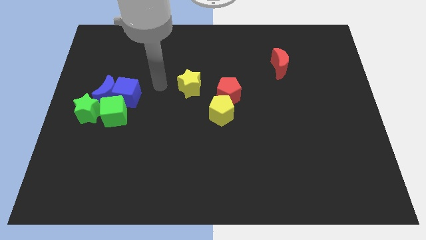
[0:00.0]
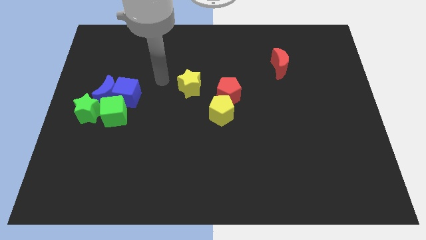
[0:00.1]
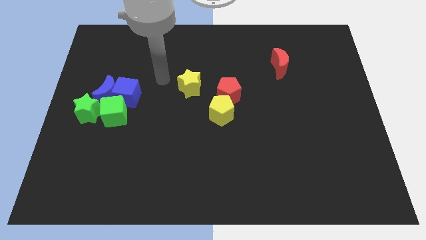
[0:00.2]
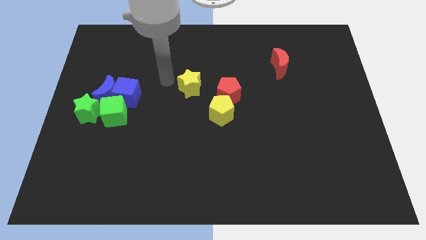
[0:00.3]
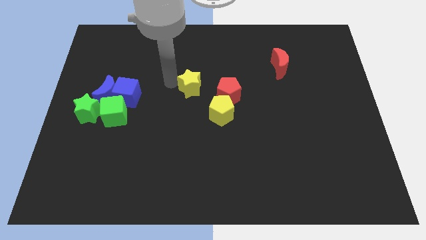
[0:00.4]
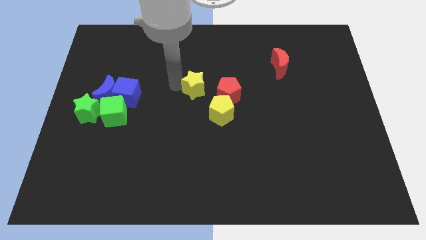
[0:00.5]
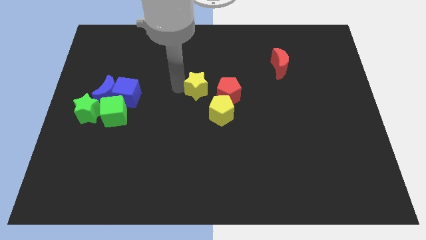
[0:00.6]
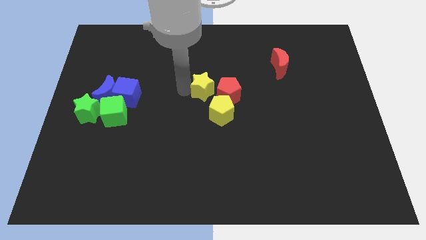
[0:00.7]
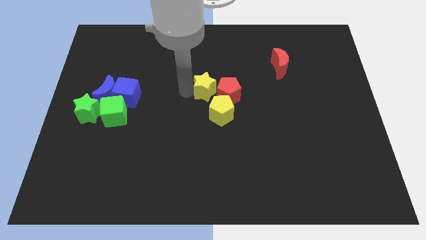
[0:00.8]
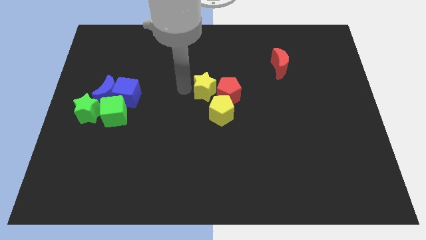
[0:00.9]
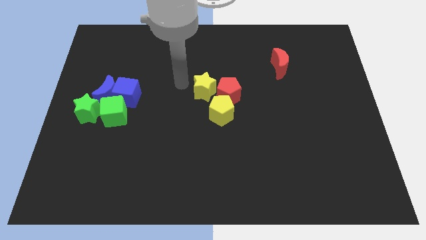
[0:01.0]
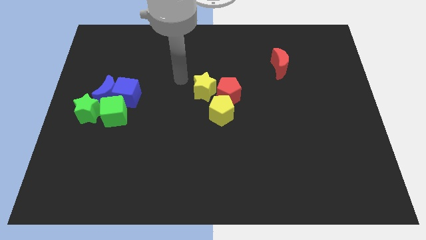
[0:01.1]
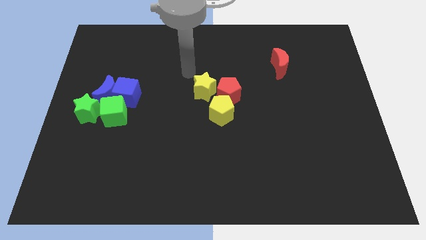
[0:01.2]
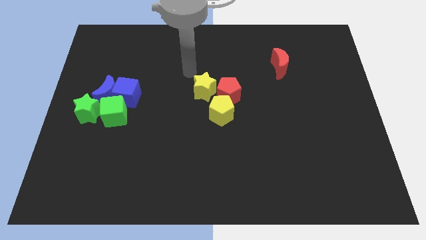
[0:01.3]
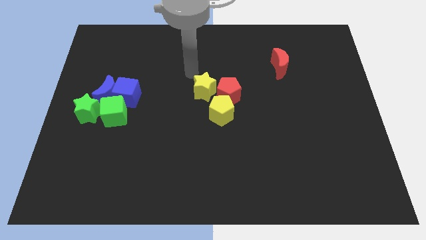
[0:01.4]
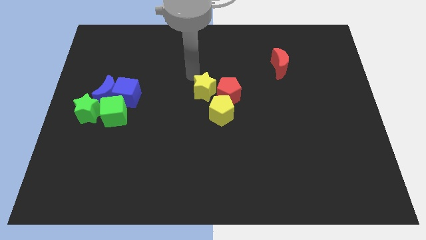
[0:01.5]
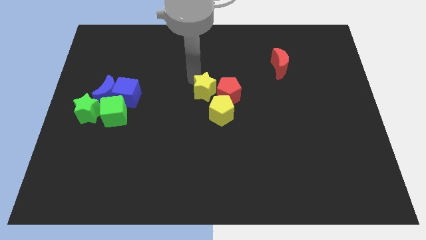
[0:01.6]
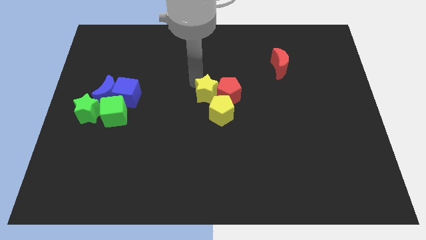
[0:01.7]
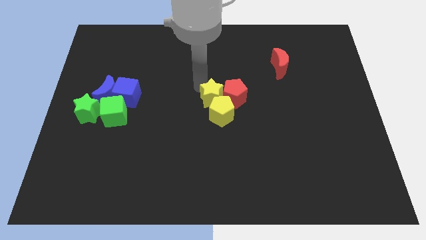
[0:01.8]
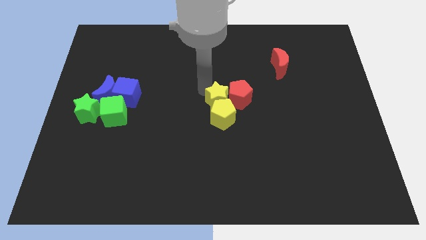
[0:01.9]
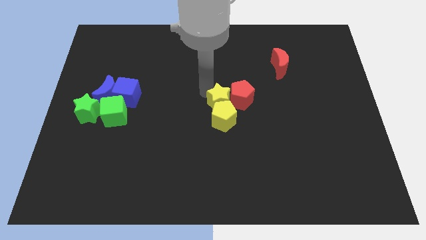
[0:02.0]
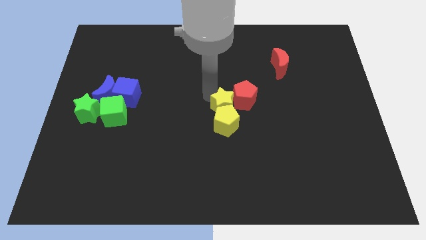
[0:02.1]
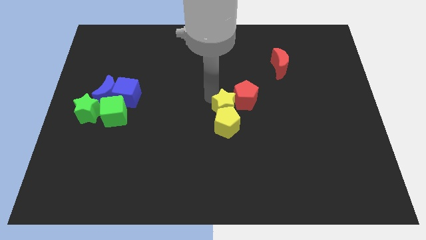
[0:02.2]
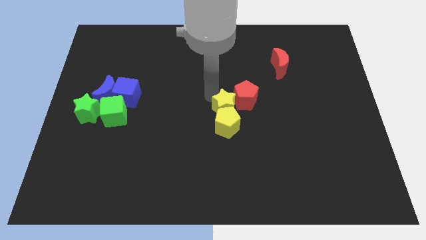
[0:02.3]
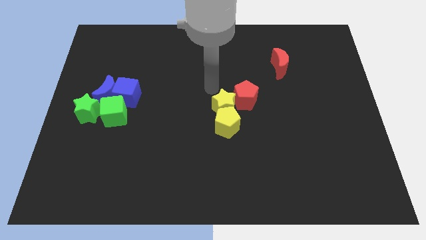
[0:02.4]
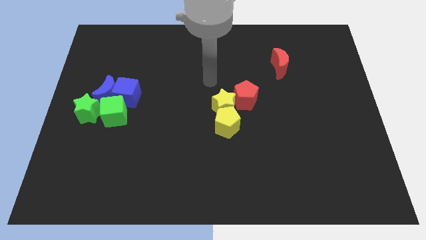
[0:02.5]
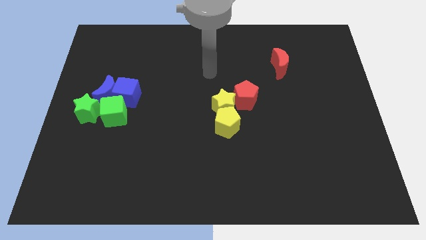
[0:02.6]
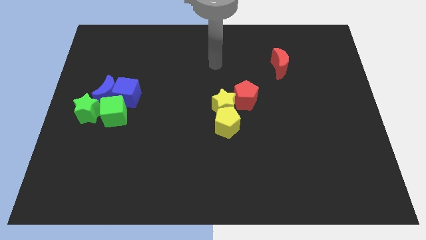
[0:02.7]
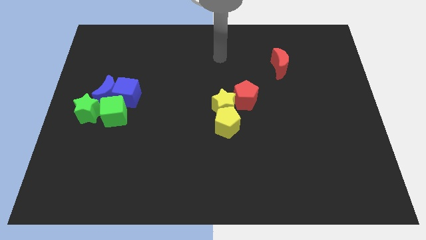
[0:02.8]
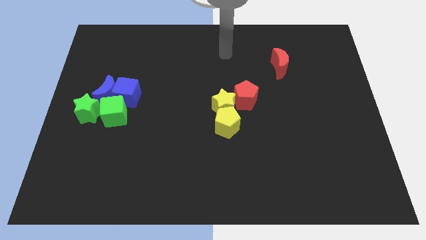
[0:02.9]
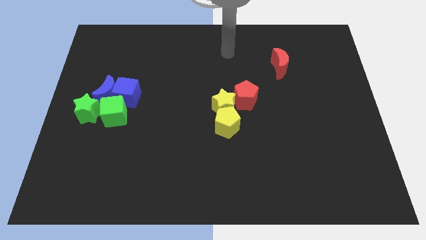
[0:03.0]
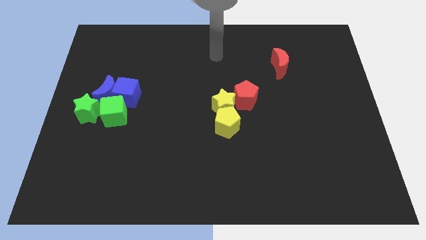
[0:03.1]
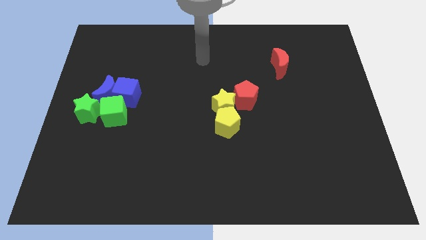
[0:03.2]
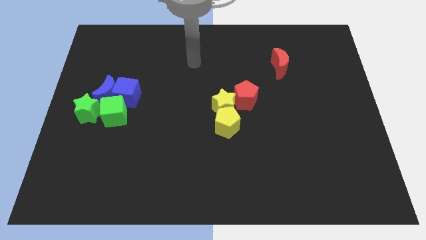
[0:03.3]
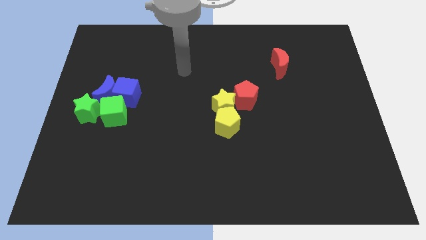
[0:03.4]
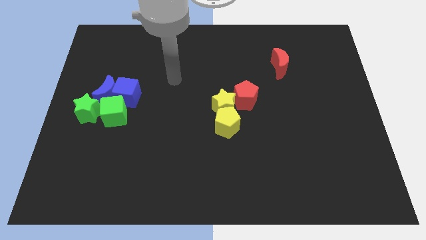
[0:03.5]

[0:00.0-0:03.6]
add yellow star into the red pentagon and yellow pentagon

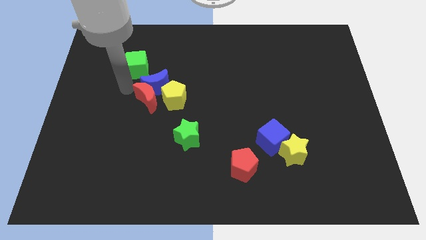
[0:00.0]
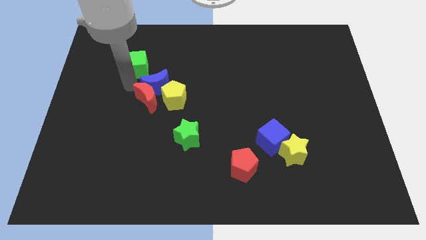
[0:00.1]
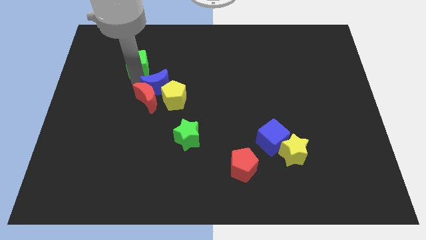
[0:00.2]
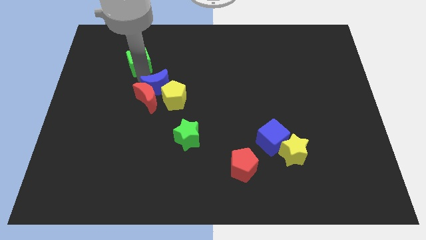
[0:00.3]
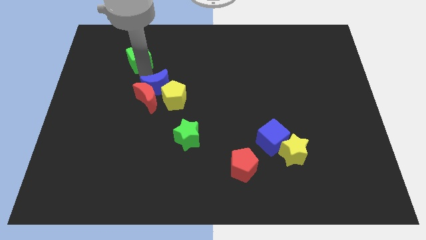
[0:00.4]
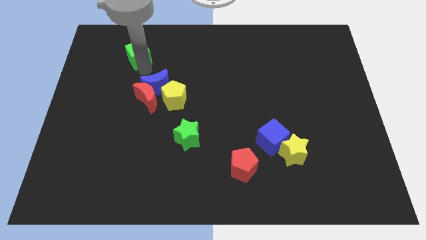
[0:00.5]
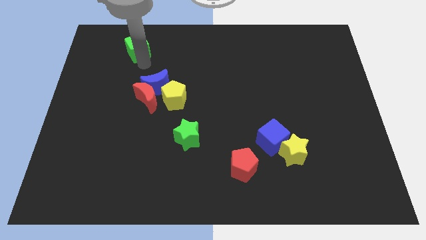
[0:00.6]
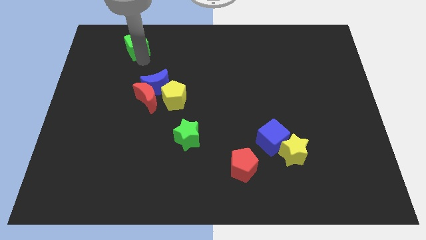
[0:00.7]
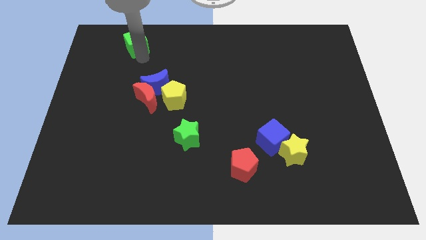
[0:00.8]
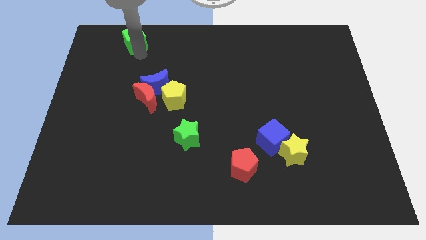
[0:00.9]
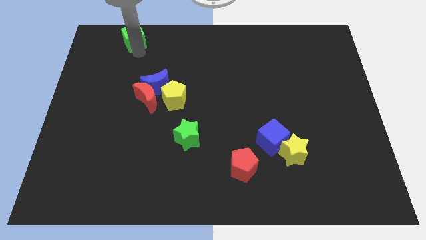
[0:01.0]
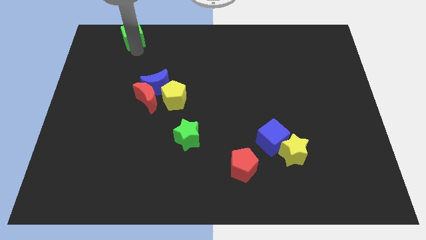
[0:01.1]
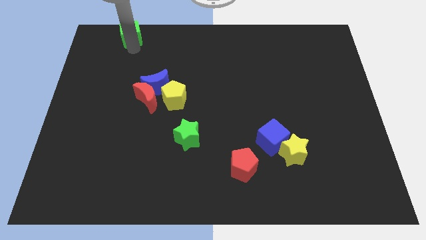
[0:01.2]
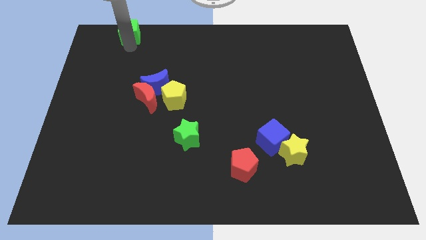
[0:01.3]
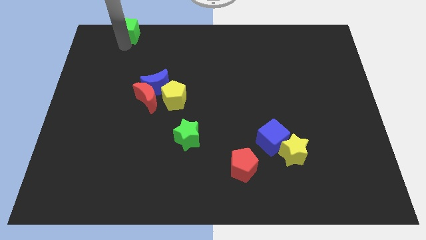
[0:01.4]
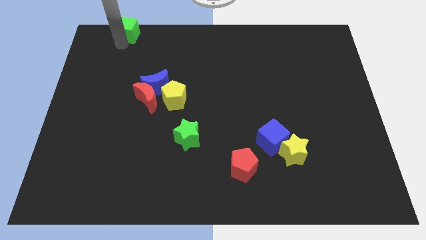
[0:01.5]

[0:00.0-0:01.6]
move the green cube slightly to the top left

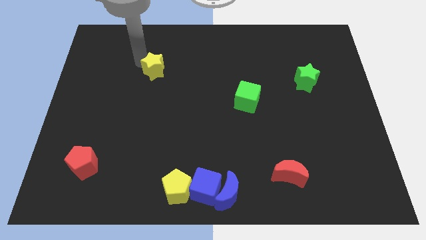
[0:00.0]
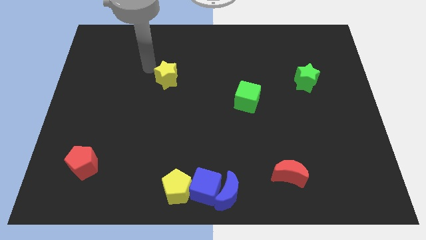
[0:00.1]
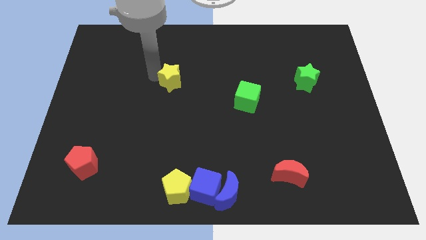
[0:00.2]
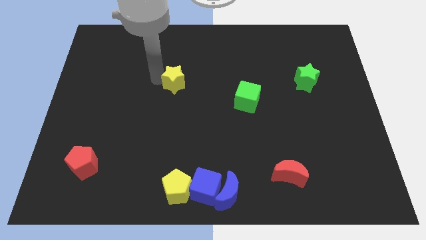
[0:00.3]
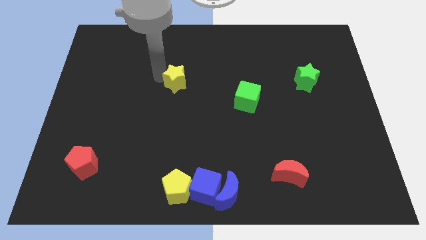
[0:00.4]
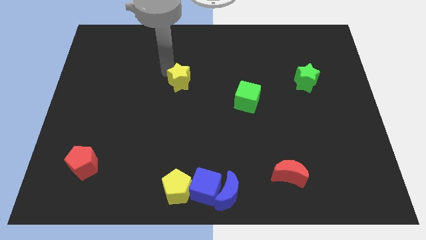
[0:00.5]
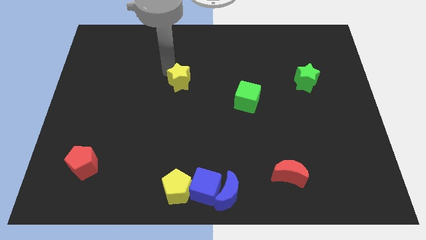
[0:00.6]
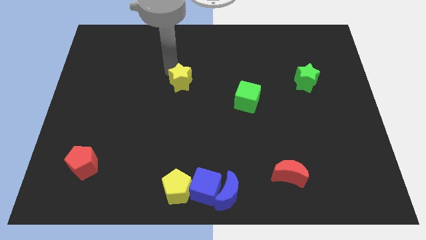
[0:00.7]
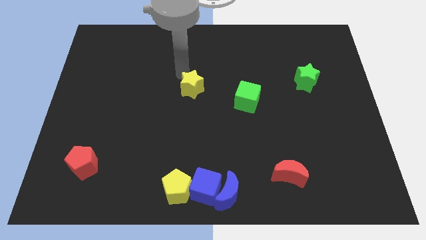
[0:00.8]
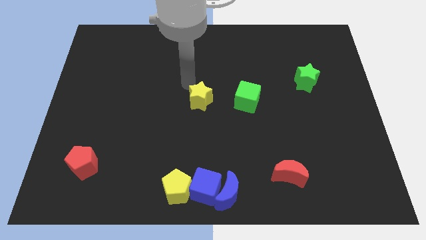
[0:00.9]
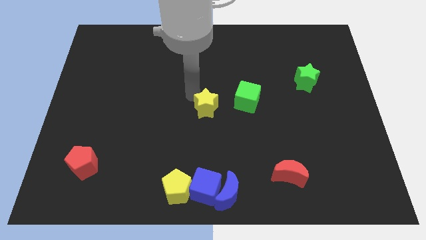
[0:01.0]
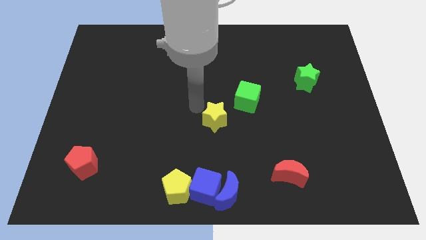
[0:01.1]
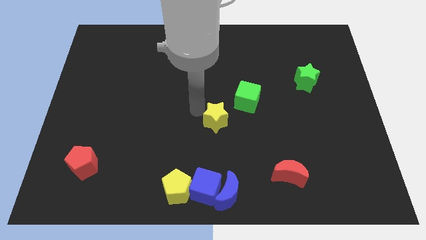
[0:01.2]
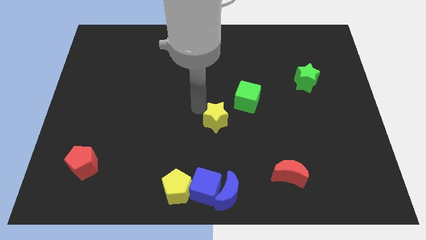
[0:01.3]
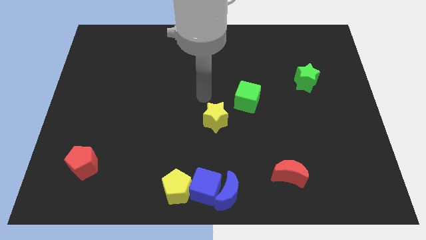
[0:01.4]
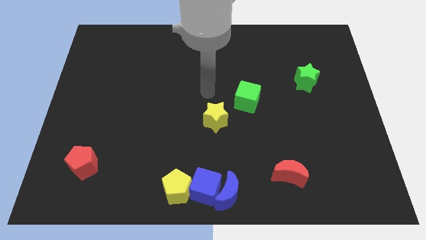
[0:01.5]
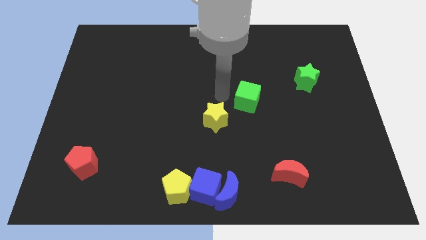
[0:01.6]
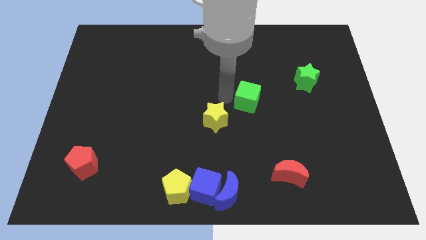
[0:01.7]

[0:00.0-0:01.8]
move the yellow star diagonally to the green cube

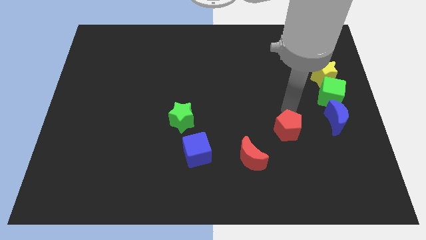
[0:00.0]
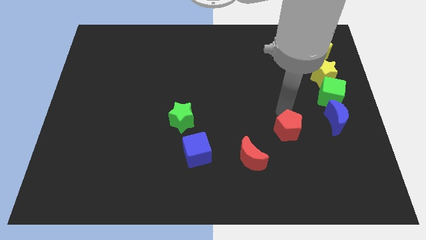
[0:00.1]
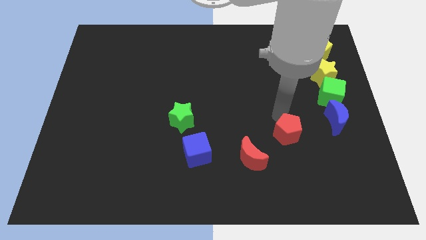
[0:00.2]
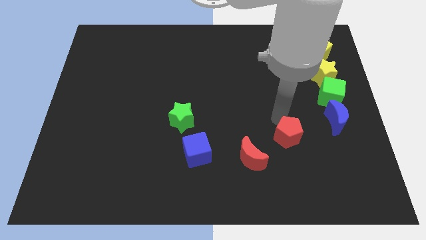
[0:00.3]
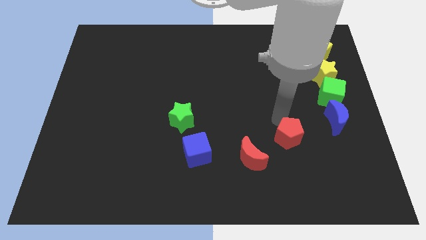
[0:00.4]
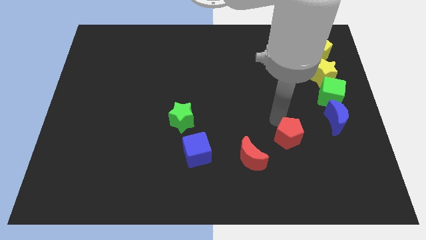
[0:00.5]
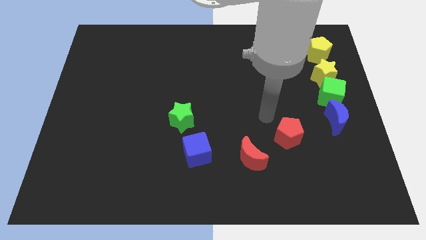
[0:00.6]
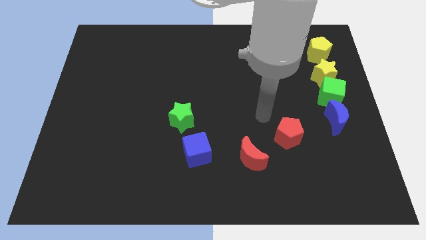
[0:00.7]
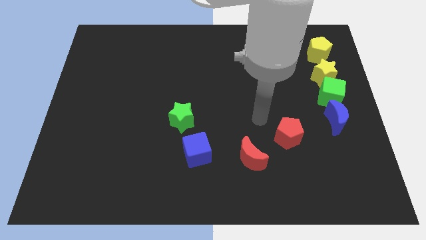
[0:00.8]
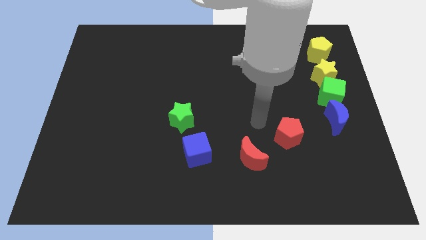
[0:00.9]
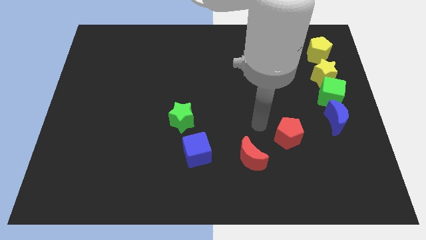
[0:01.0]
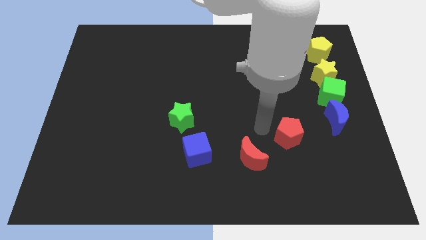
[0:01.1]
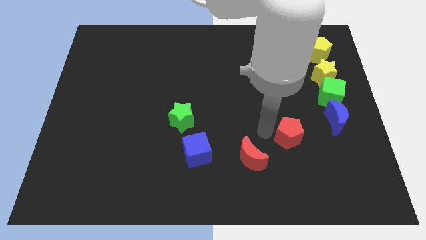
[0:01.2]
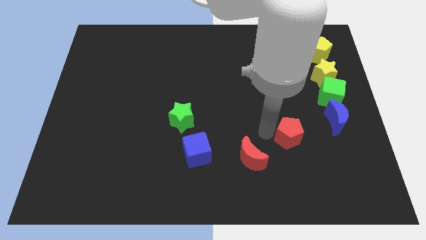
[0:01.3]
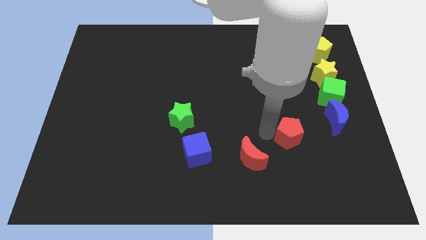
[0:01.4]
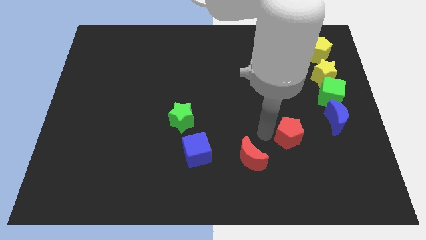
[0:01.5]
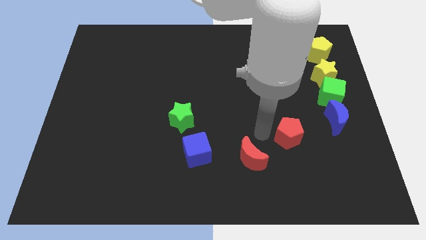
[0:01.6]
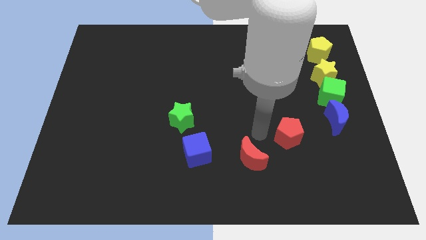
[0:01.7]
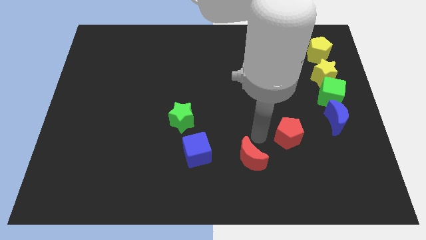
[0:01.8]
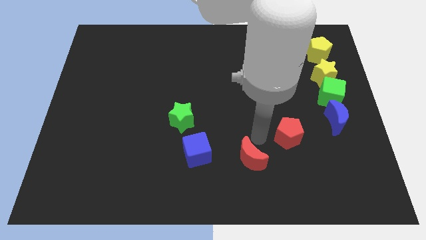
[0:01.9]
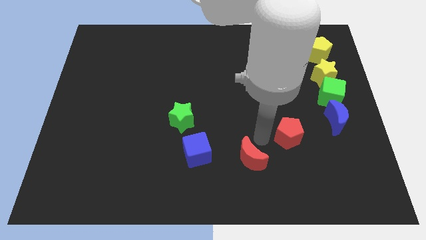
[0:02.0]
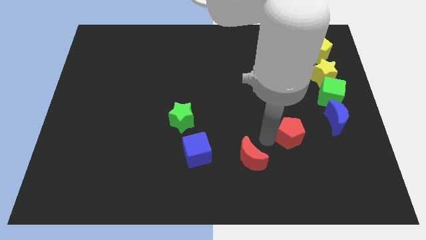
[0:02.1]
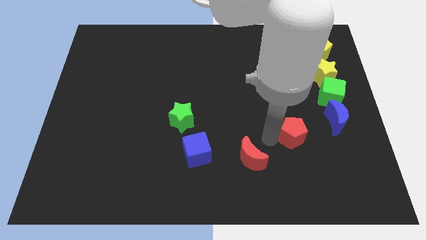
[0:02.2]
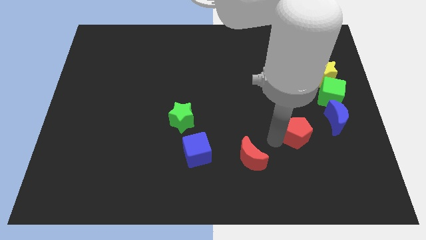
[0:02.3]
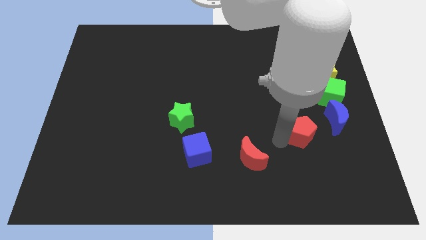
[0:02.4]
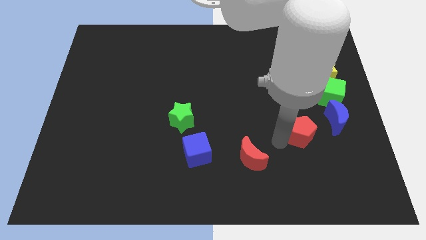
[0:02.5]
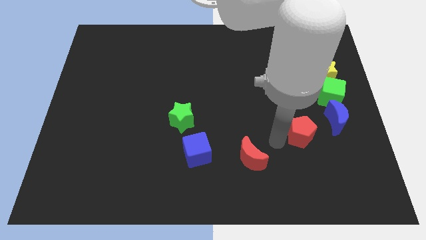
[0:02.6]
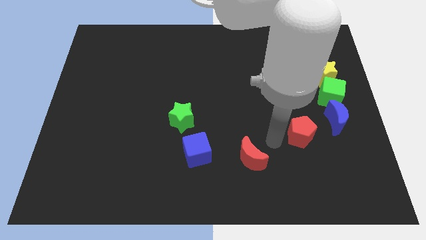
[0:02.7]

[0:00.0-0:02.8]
push the red pentagon towards the right
